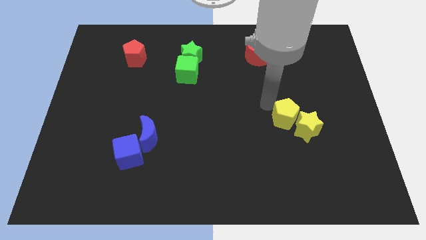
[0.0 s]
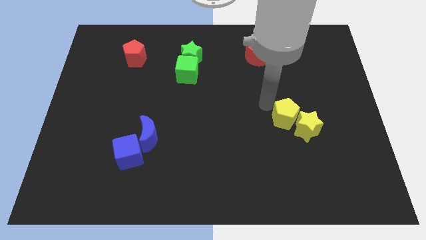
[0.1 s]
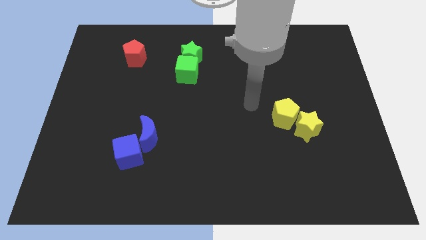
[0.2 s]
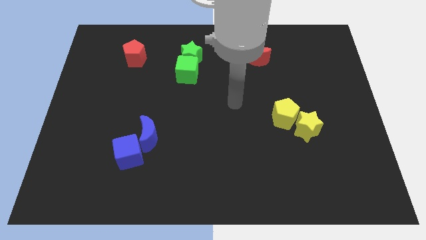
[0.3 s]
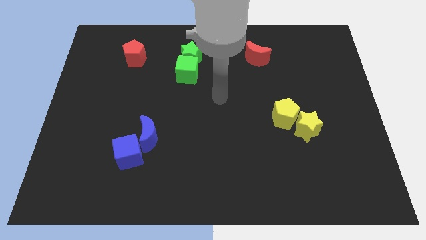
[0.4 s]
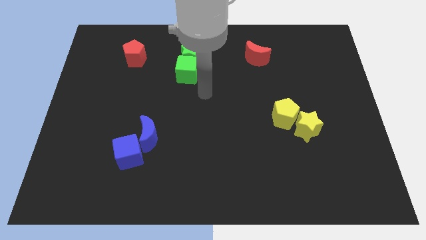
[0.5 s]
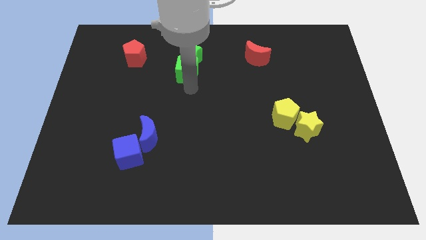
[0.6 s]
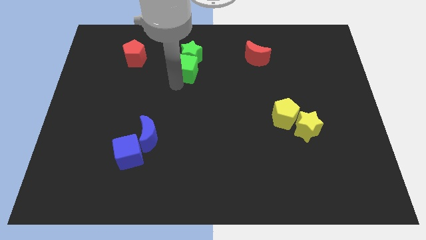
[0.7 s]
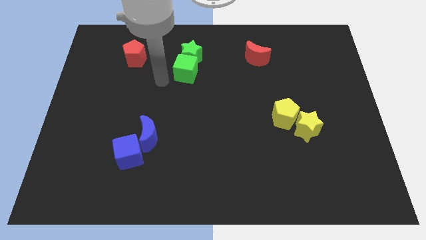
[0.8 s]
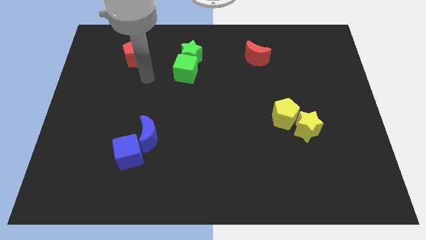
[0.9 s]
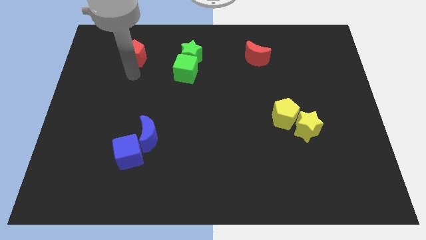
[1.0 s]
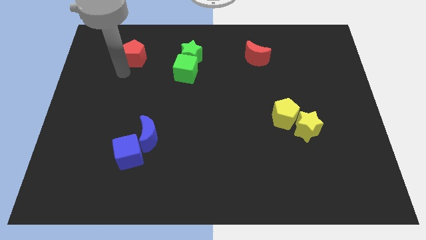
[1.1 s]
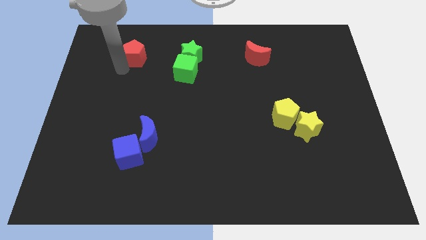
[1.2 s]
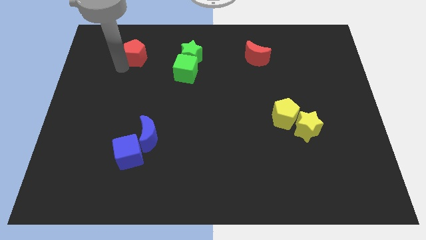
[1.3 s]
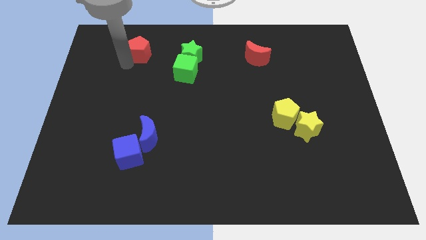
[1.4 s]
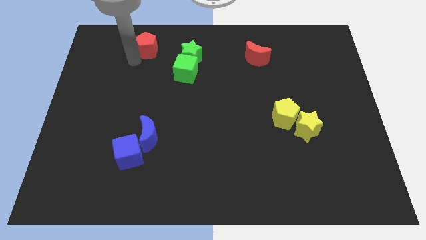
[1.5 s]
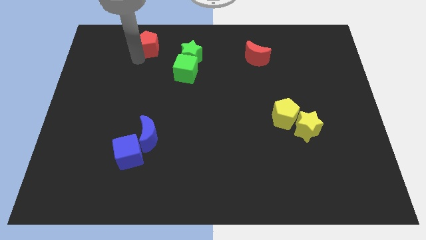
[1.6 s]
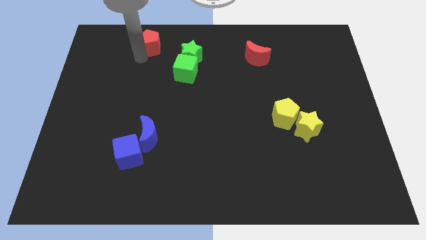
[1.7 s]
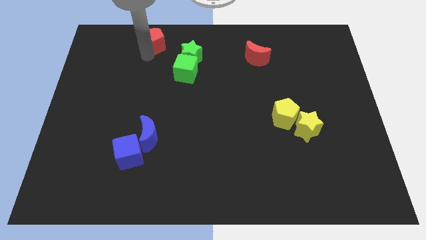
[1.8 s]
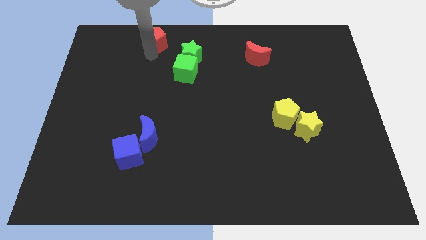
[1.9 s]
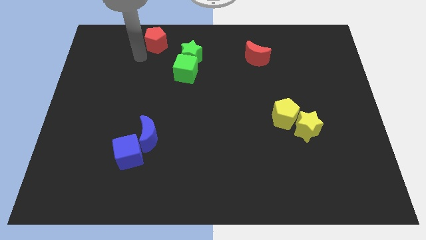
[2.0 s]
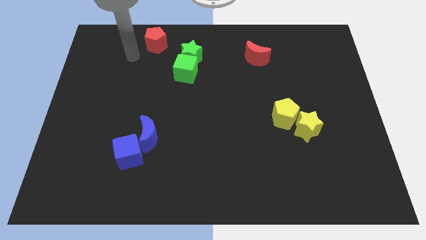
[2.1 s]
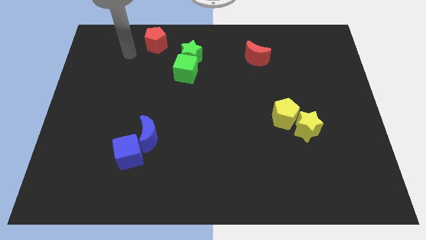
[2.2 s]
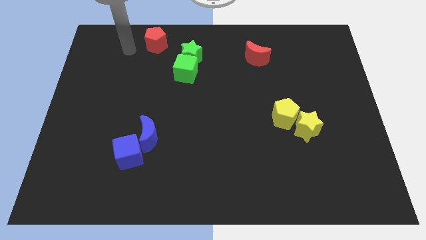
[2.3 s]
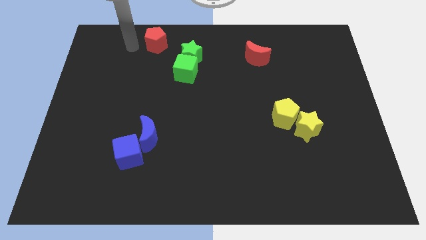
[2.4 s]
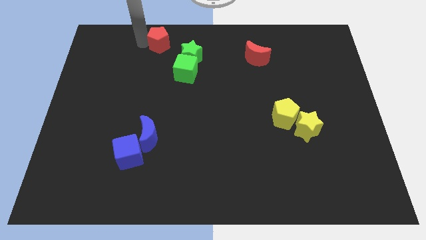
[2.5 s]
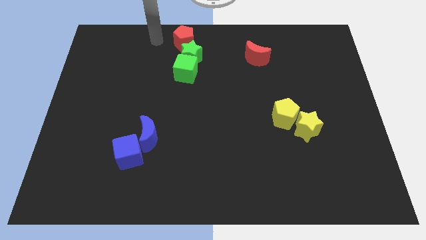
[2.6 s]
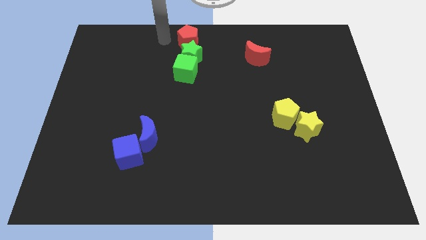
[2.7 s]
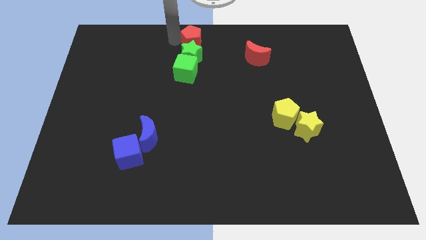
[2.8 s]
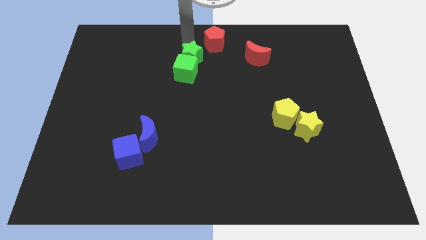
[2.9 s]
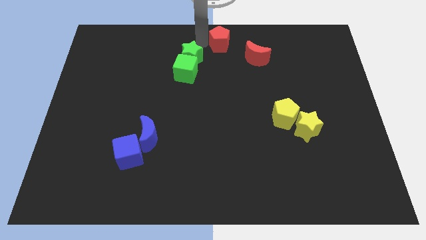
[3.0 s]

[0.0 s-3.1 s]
place the red pentagon at the top center of the board

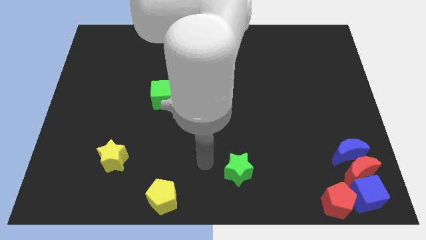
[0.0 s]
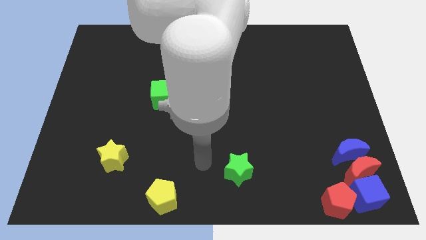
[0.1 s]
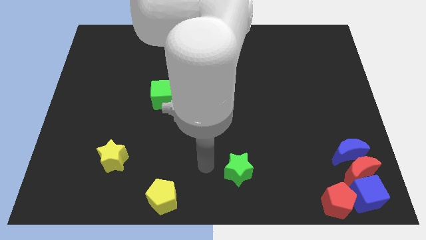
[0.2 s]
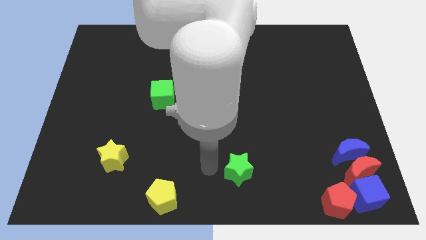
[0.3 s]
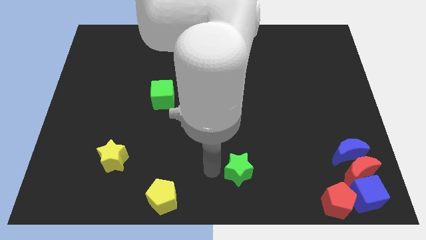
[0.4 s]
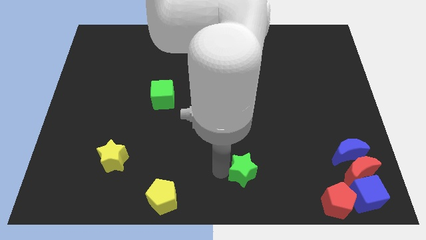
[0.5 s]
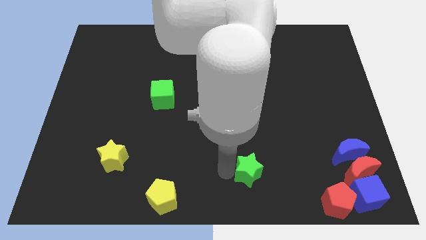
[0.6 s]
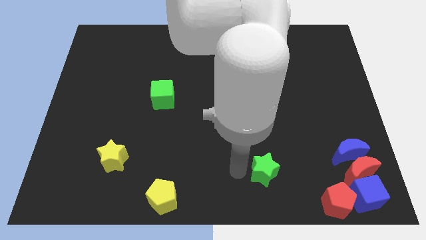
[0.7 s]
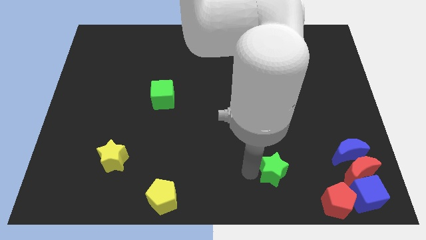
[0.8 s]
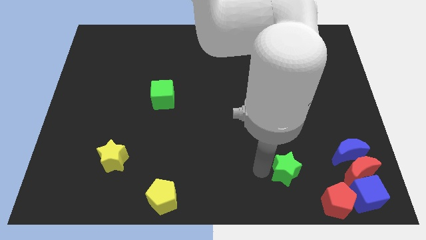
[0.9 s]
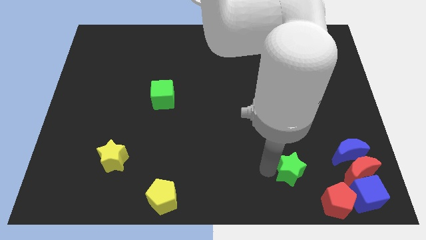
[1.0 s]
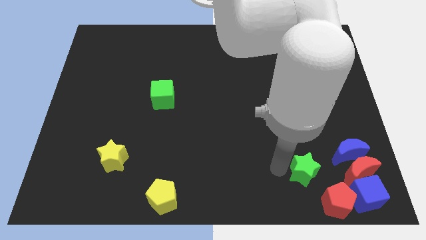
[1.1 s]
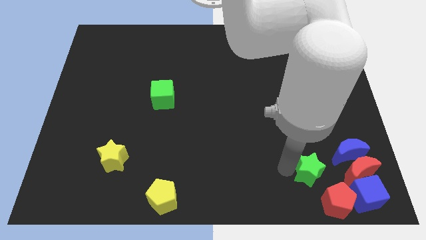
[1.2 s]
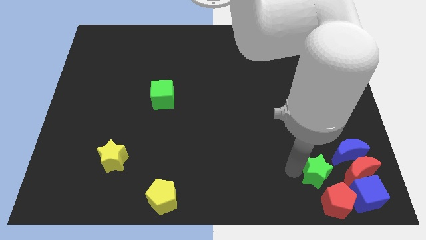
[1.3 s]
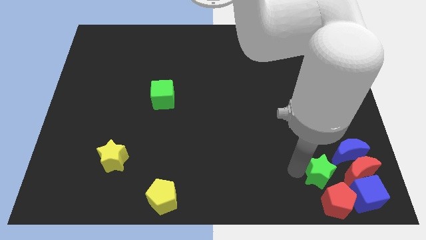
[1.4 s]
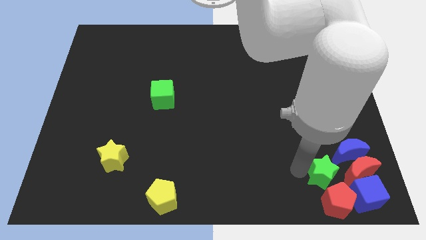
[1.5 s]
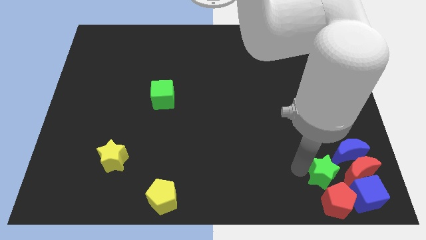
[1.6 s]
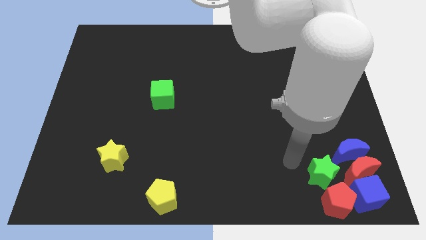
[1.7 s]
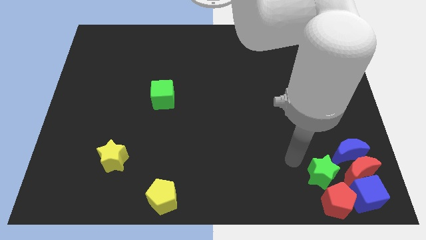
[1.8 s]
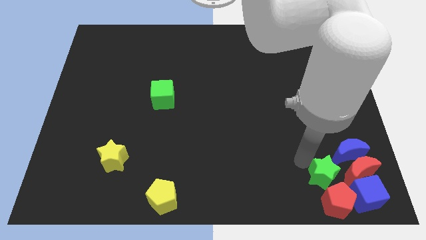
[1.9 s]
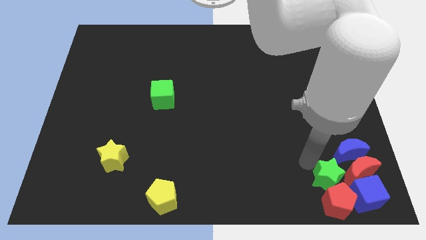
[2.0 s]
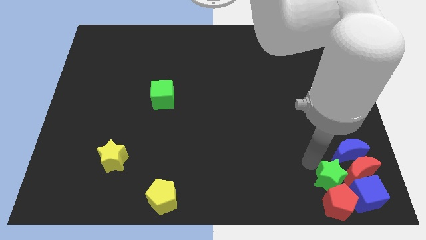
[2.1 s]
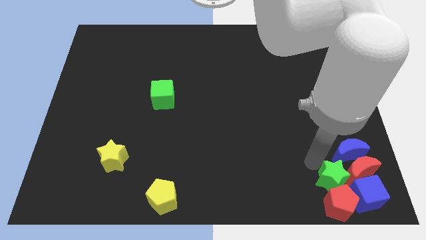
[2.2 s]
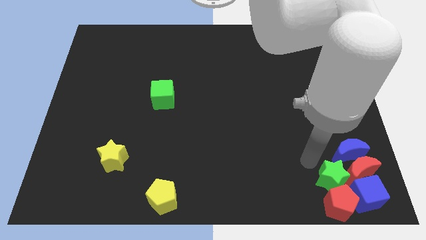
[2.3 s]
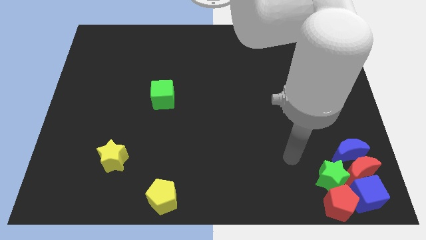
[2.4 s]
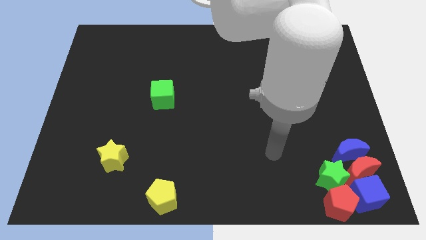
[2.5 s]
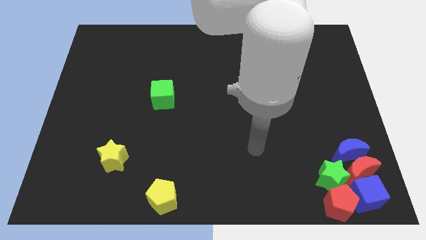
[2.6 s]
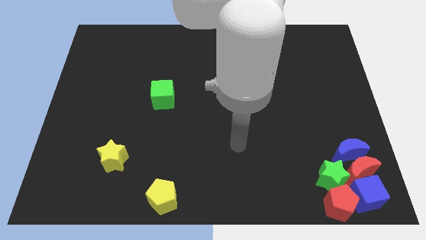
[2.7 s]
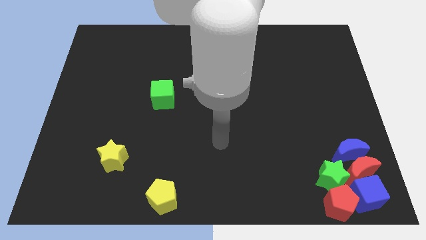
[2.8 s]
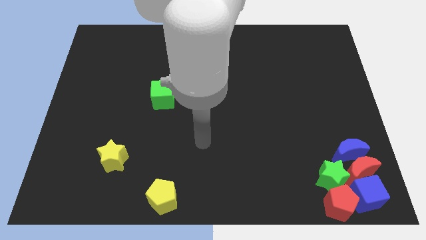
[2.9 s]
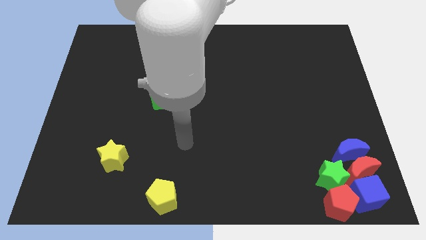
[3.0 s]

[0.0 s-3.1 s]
move the green star to the left of the red moon

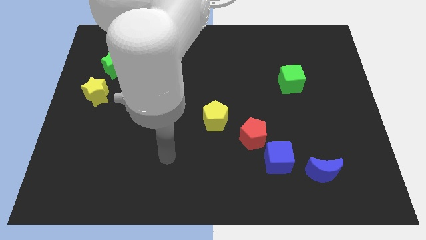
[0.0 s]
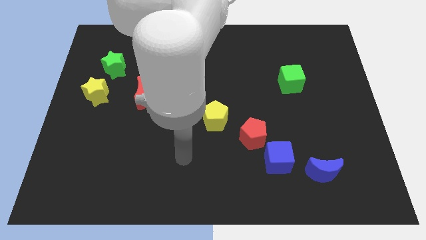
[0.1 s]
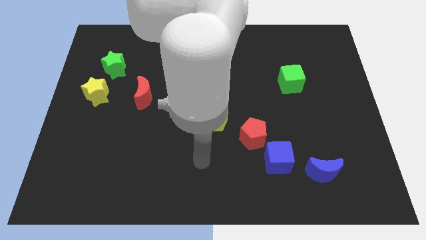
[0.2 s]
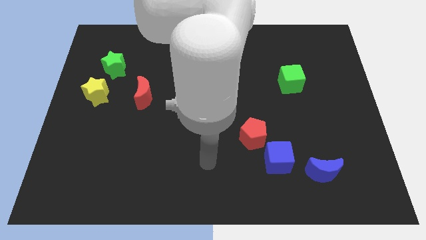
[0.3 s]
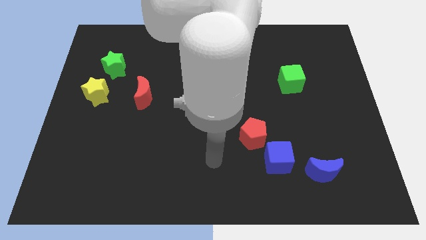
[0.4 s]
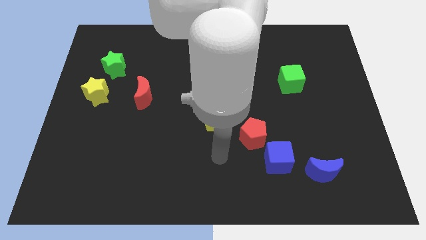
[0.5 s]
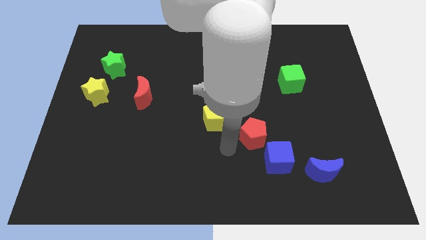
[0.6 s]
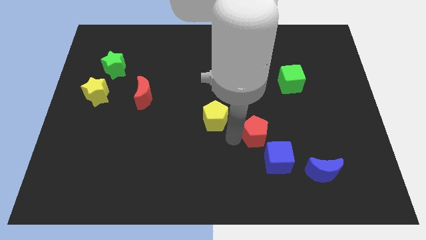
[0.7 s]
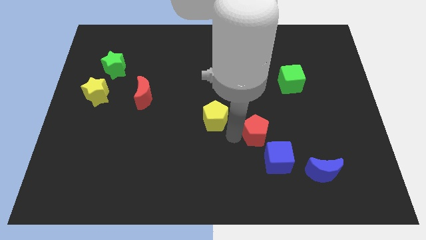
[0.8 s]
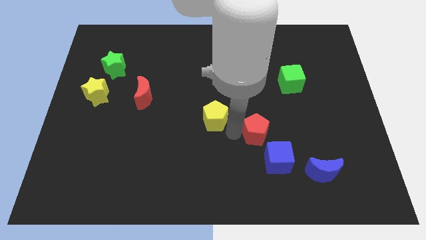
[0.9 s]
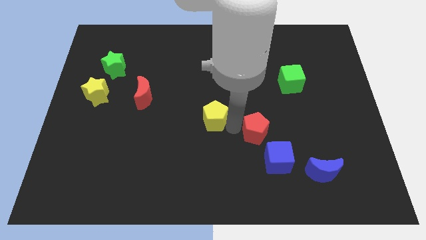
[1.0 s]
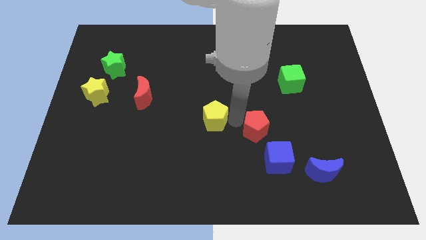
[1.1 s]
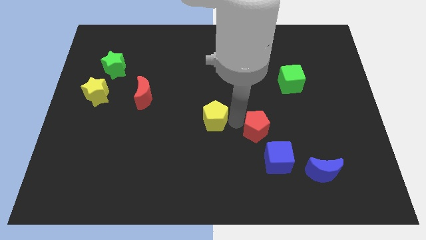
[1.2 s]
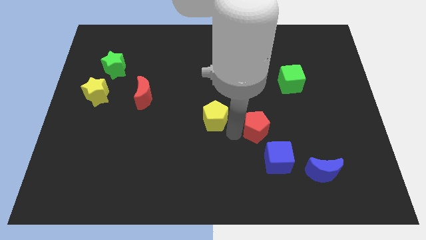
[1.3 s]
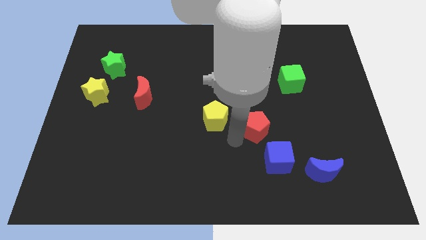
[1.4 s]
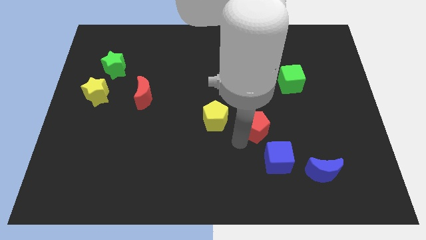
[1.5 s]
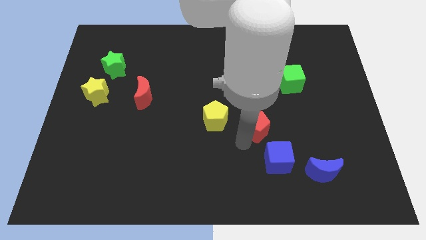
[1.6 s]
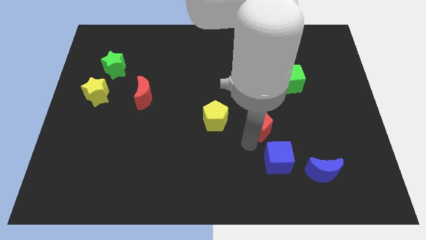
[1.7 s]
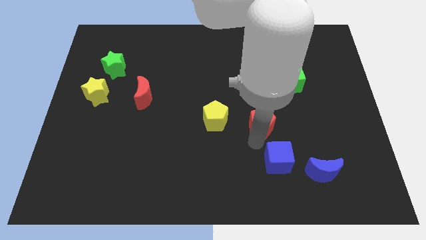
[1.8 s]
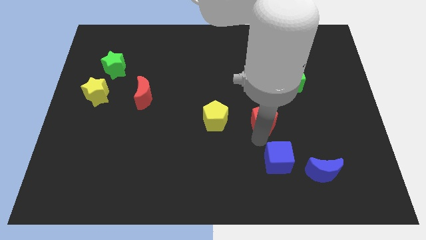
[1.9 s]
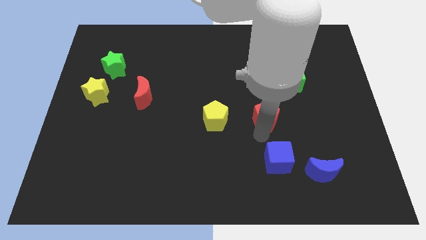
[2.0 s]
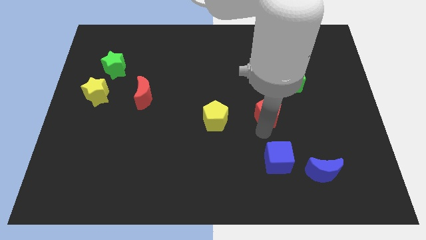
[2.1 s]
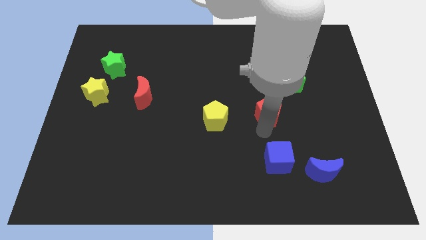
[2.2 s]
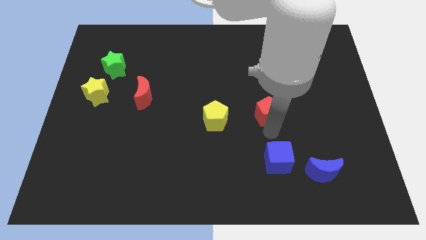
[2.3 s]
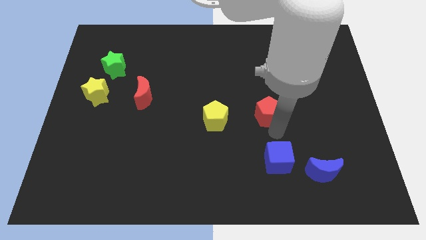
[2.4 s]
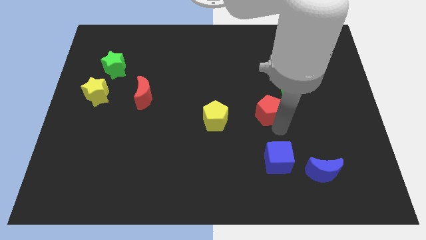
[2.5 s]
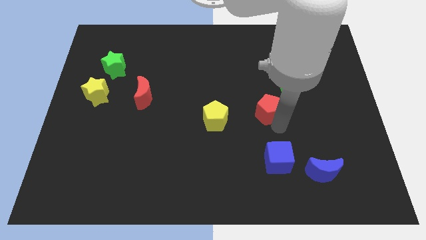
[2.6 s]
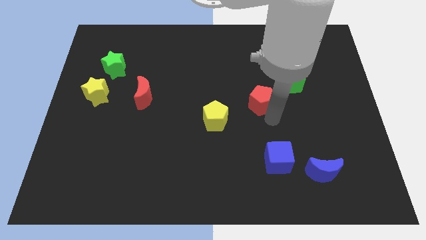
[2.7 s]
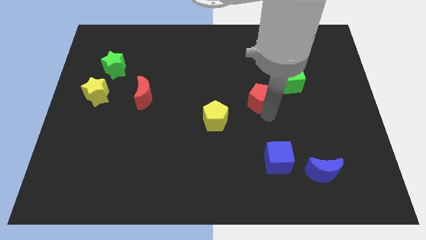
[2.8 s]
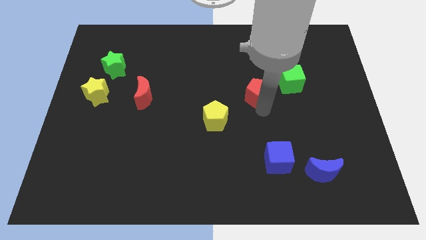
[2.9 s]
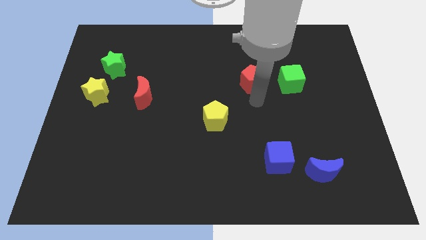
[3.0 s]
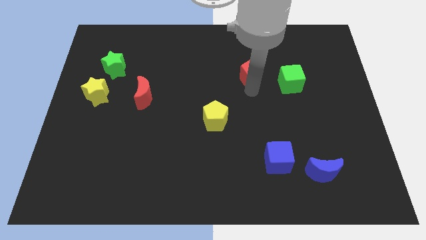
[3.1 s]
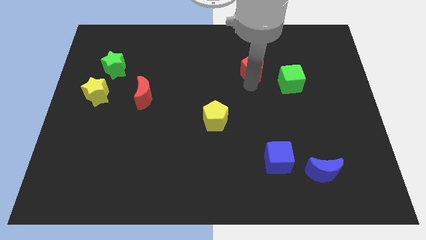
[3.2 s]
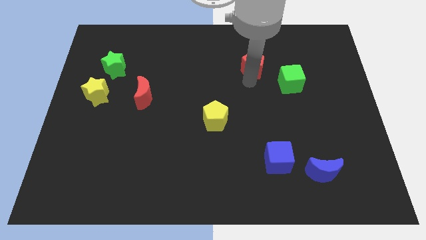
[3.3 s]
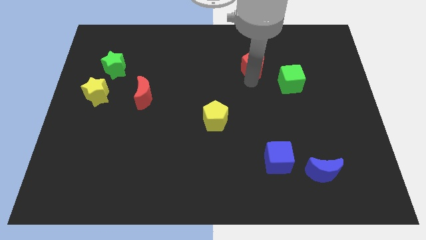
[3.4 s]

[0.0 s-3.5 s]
move the red pentagon towards the top center of the board
